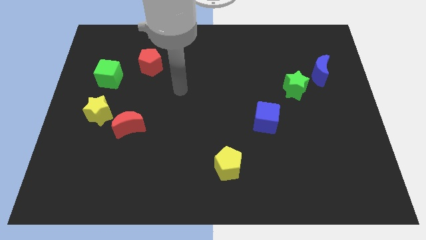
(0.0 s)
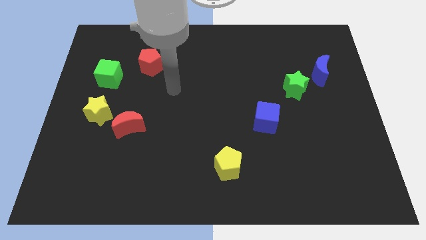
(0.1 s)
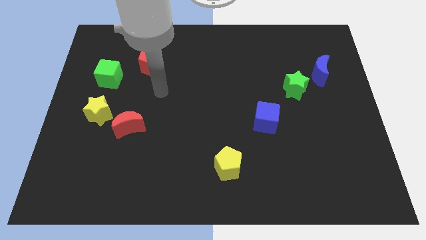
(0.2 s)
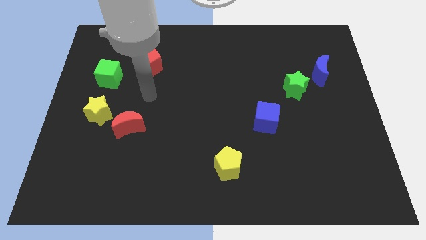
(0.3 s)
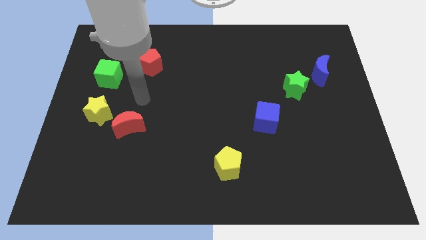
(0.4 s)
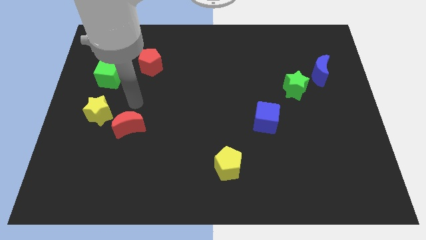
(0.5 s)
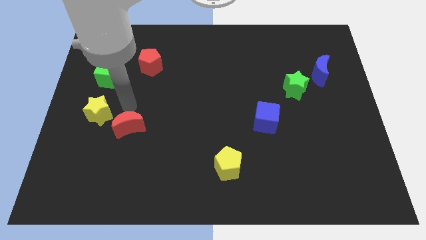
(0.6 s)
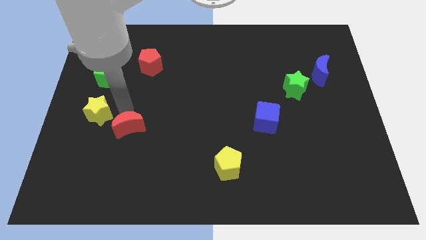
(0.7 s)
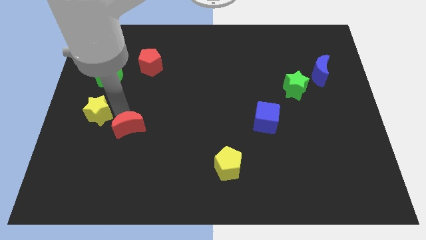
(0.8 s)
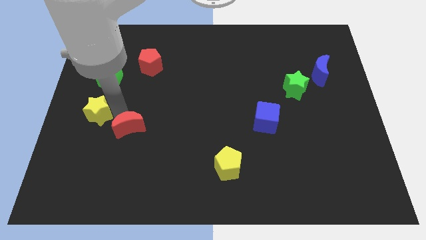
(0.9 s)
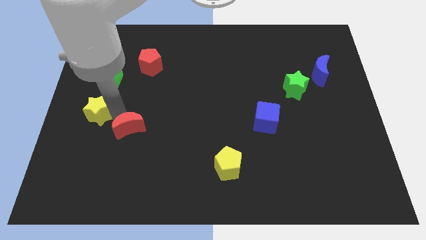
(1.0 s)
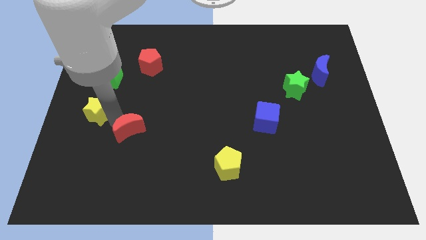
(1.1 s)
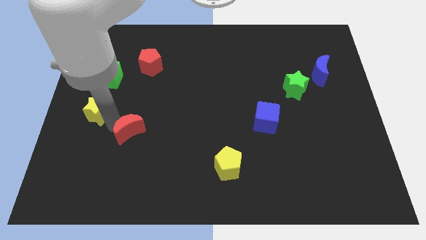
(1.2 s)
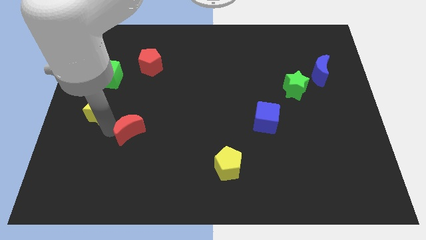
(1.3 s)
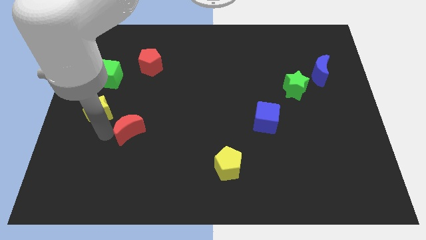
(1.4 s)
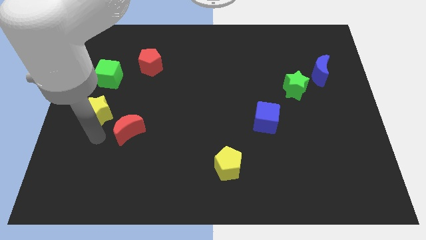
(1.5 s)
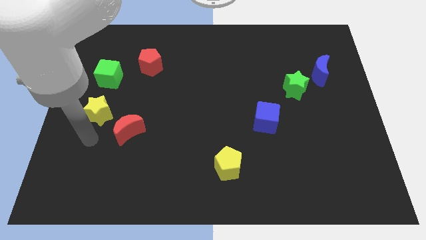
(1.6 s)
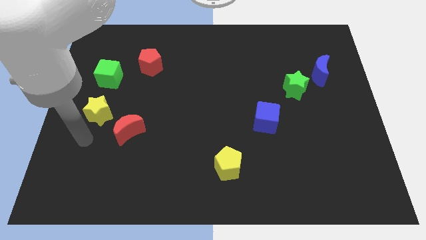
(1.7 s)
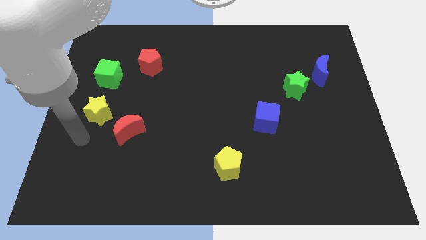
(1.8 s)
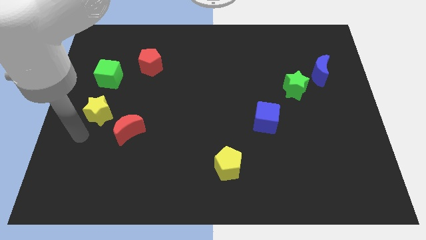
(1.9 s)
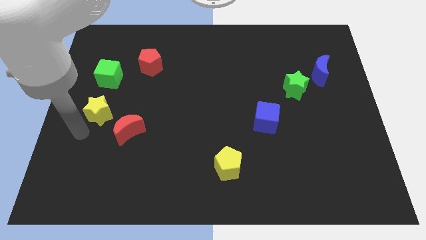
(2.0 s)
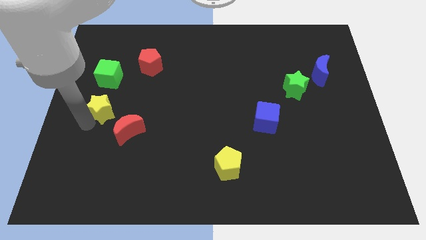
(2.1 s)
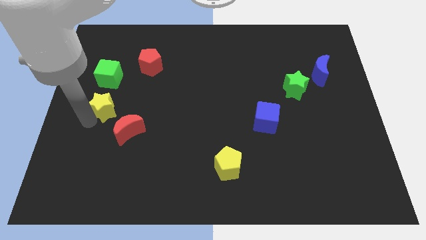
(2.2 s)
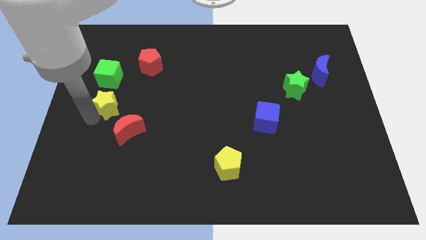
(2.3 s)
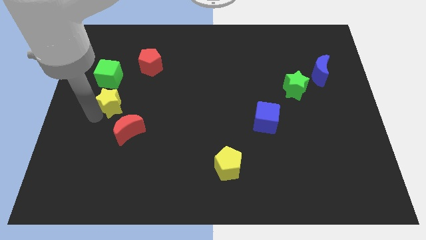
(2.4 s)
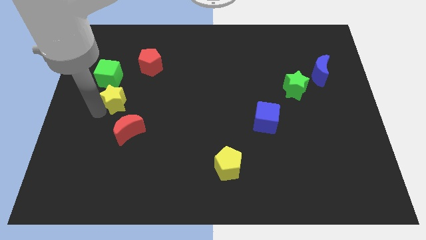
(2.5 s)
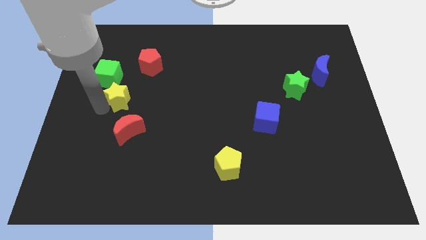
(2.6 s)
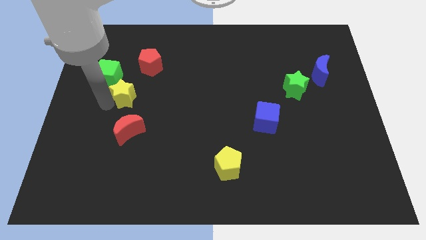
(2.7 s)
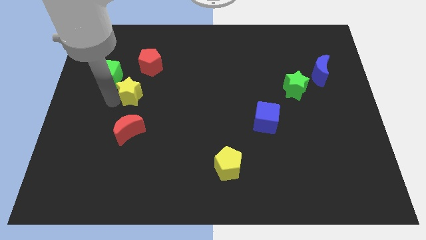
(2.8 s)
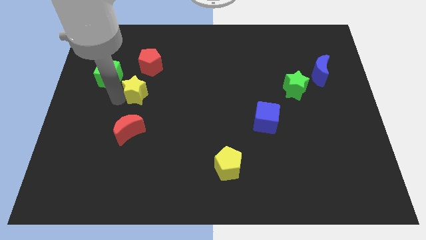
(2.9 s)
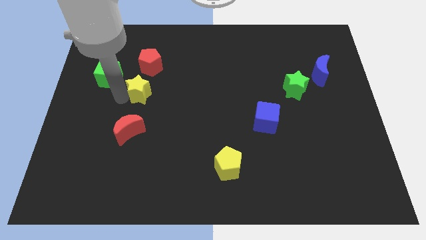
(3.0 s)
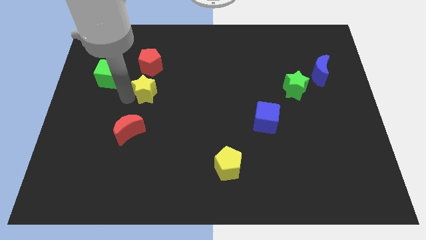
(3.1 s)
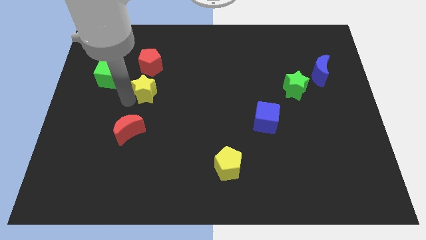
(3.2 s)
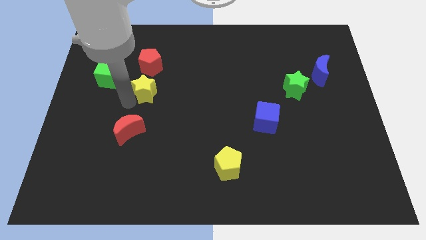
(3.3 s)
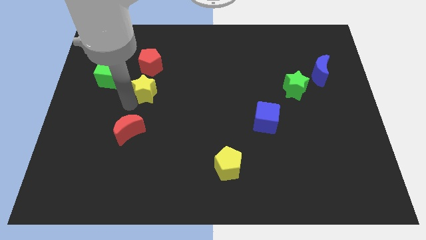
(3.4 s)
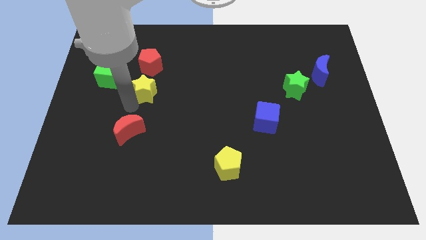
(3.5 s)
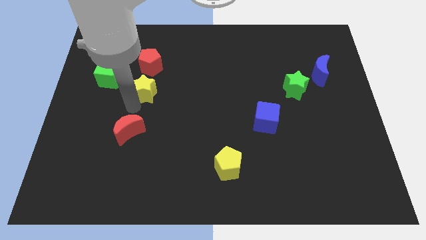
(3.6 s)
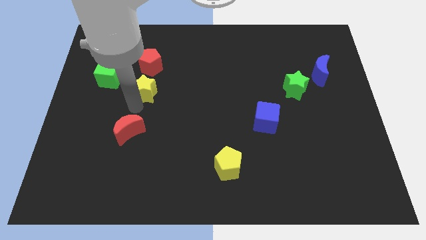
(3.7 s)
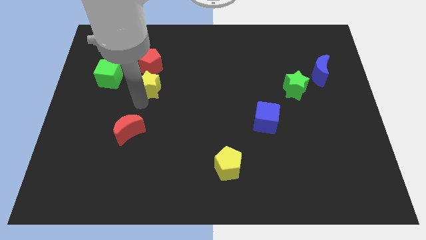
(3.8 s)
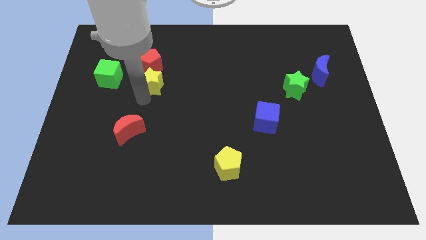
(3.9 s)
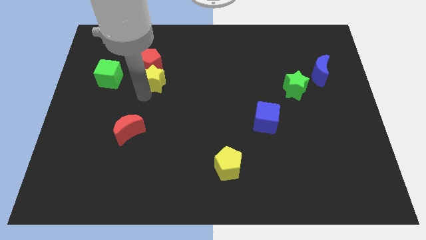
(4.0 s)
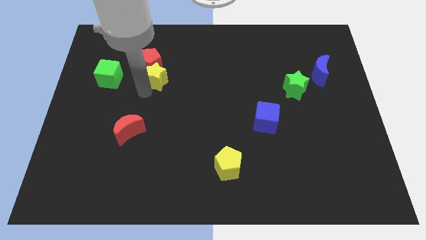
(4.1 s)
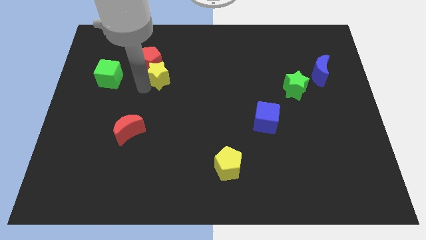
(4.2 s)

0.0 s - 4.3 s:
push the yellow star towards the red pentagon

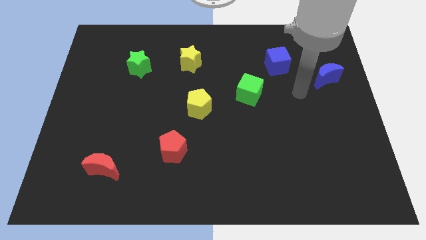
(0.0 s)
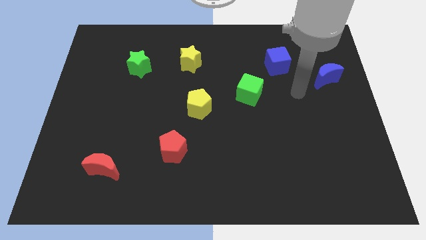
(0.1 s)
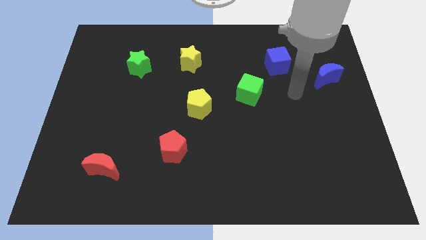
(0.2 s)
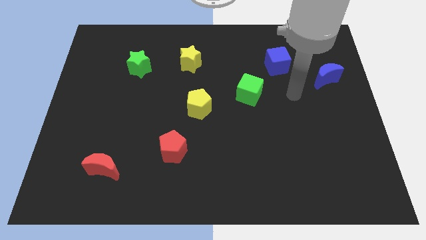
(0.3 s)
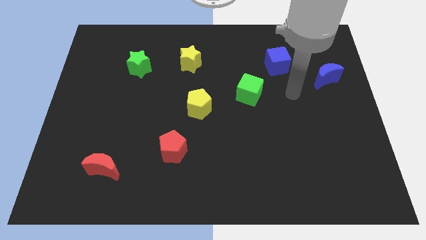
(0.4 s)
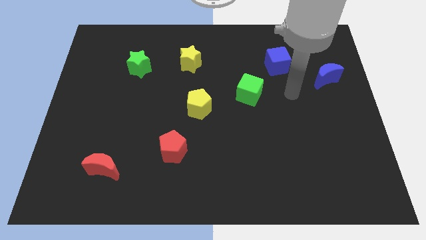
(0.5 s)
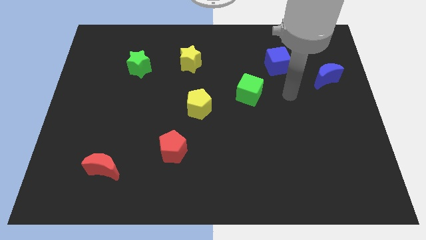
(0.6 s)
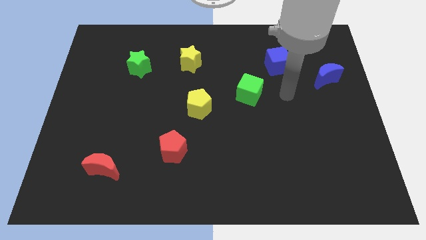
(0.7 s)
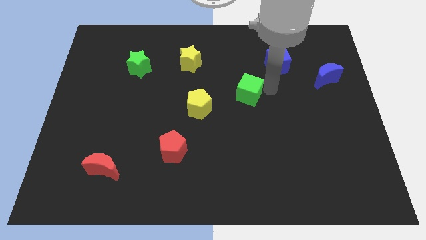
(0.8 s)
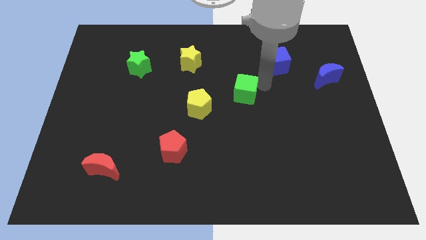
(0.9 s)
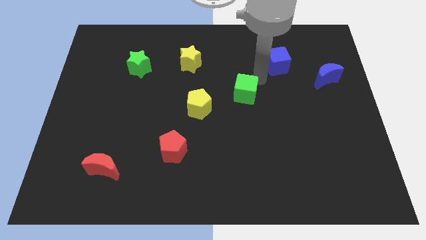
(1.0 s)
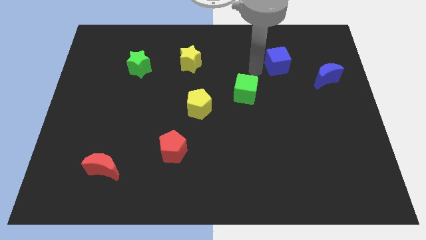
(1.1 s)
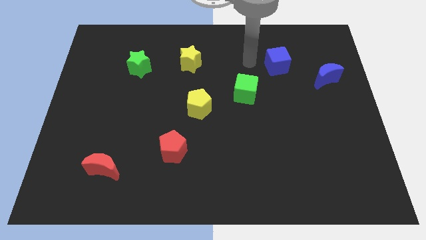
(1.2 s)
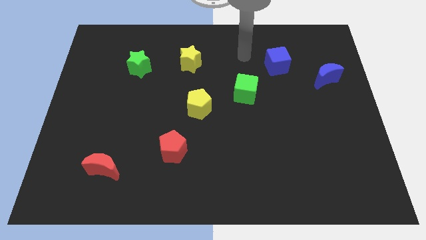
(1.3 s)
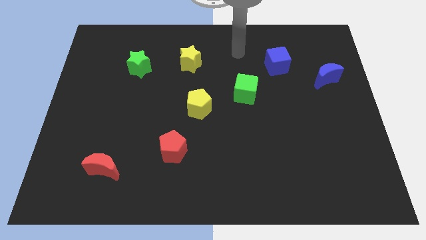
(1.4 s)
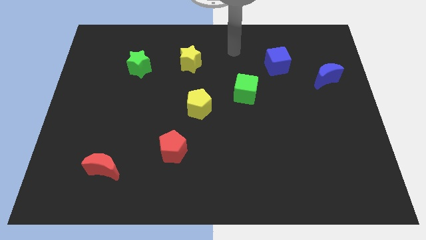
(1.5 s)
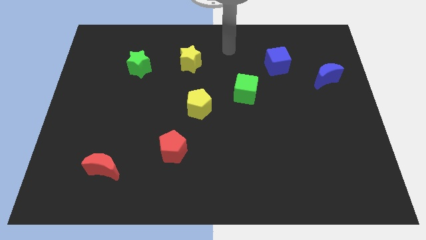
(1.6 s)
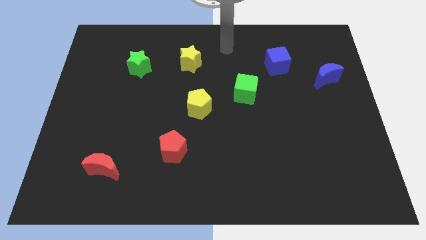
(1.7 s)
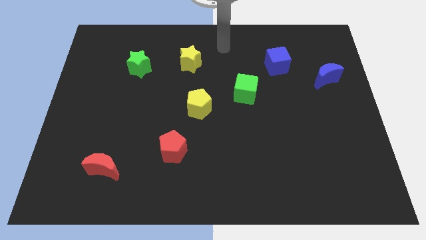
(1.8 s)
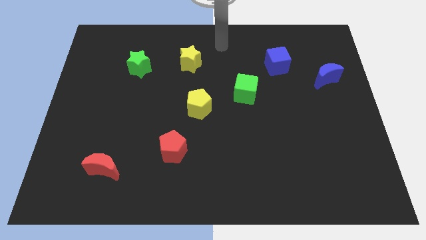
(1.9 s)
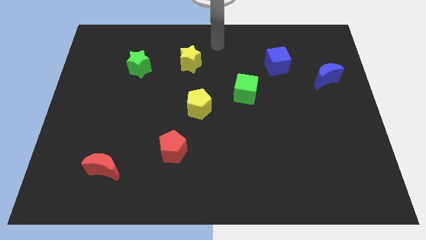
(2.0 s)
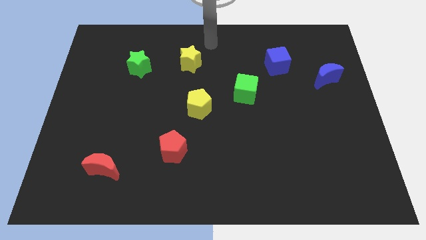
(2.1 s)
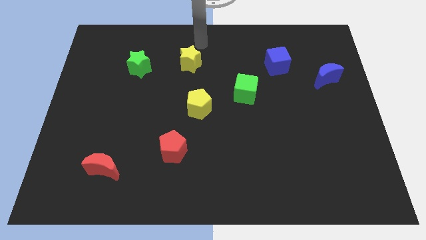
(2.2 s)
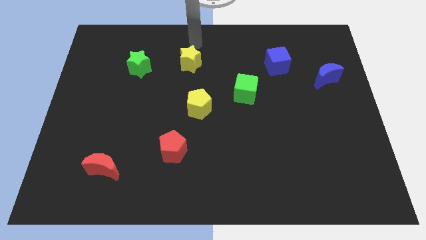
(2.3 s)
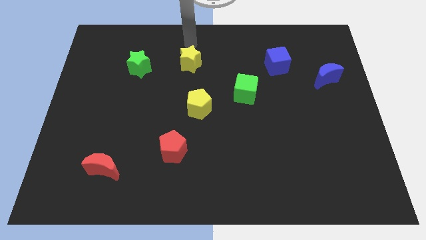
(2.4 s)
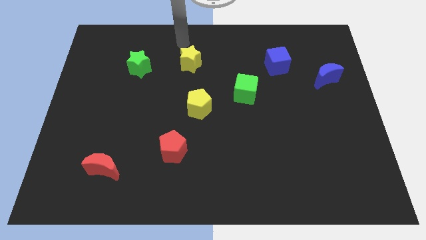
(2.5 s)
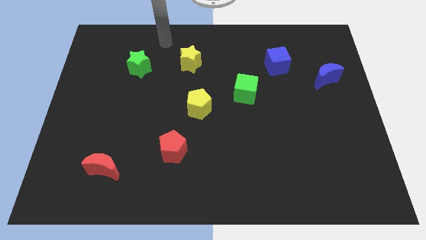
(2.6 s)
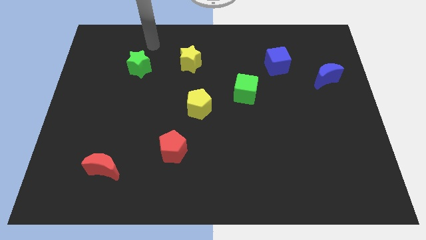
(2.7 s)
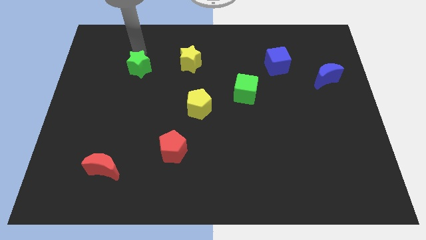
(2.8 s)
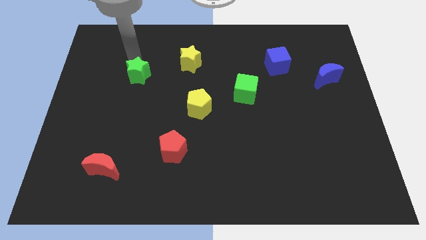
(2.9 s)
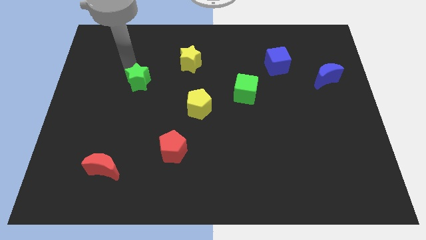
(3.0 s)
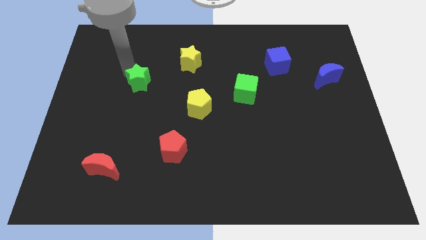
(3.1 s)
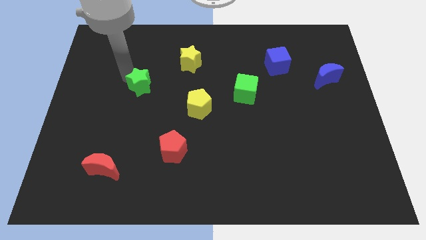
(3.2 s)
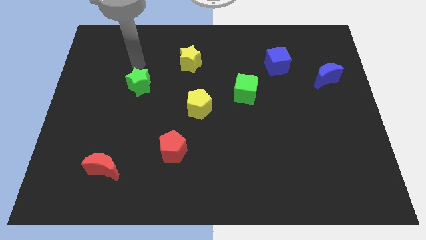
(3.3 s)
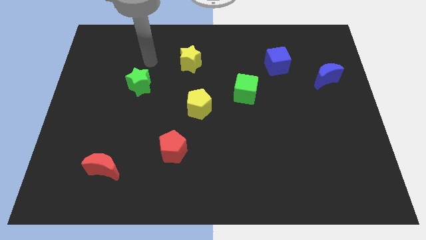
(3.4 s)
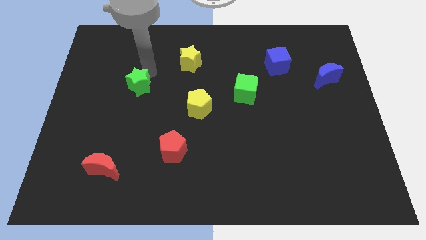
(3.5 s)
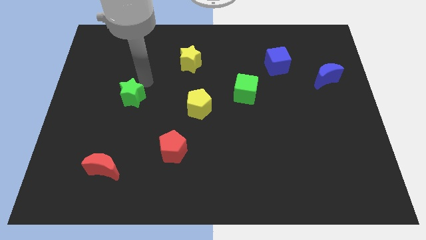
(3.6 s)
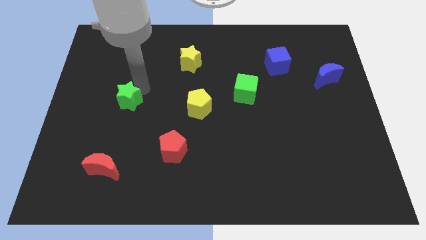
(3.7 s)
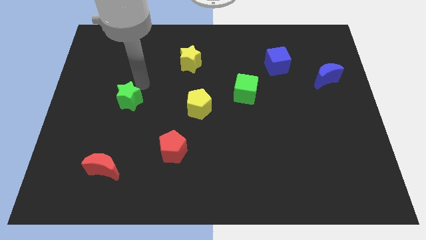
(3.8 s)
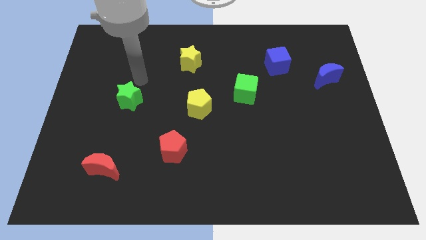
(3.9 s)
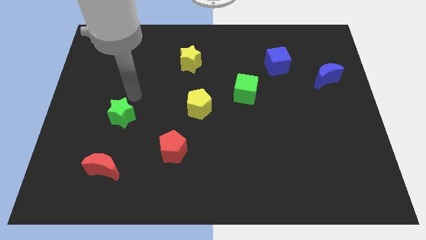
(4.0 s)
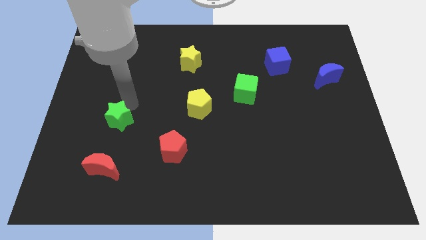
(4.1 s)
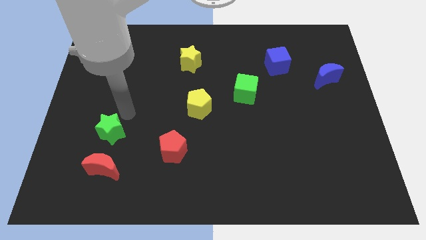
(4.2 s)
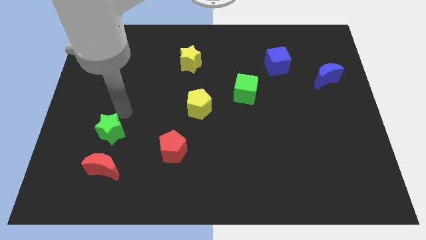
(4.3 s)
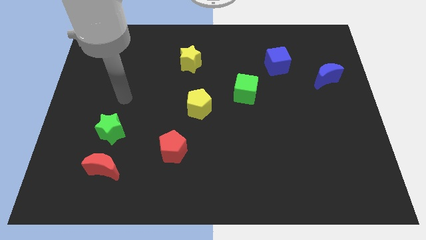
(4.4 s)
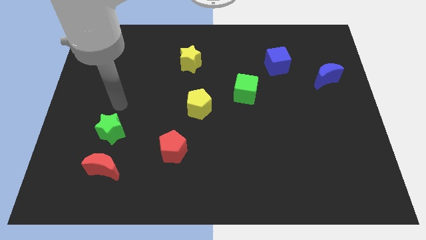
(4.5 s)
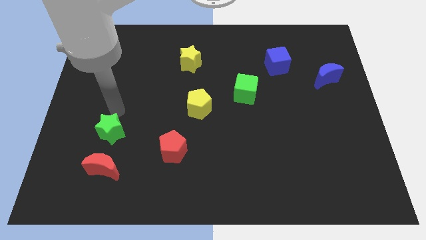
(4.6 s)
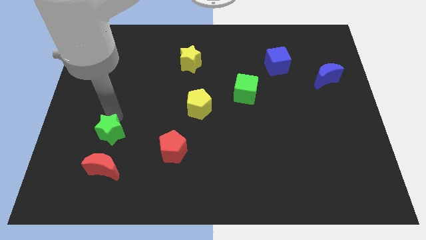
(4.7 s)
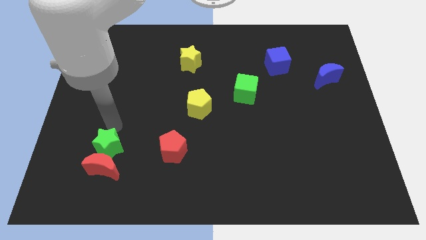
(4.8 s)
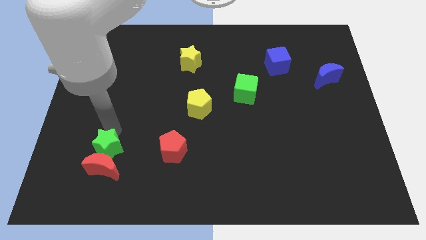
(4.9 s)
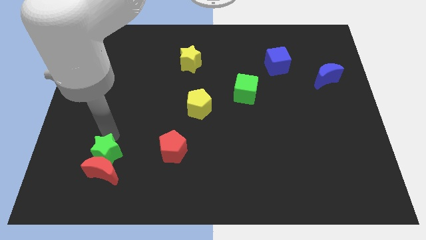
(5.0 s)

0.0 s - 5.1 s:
push the green star towards the red moon
